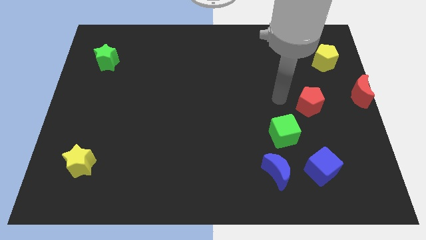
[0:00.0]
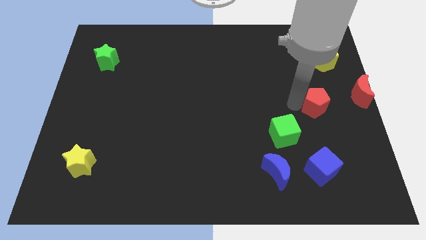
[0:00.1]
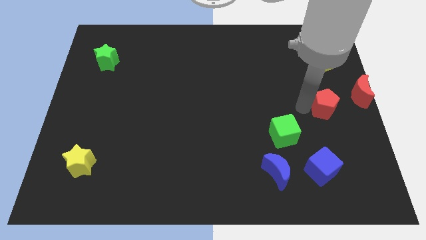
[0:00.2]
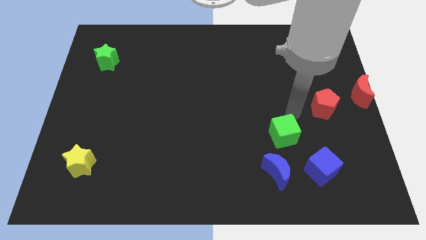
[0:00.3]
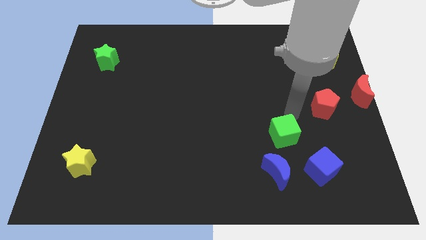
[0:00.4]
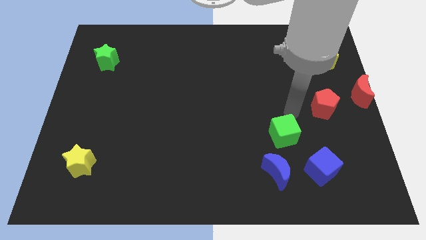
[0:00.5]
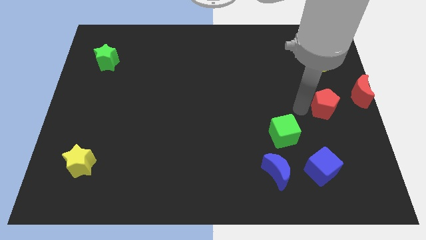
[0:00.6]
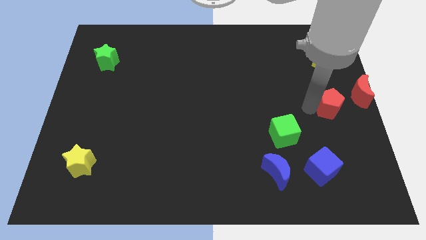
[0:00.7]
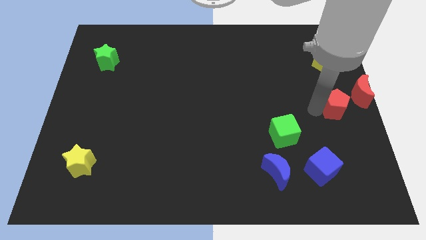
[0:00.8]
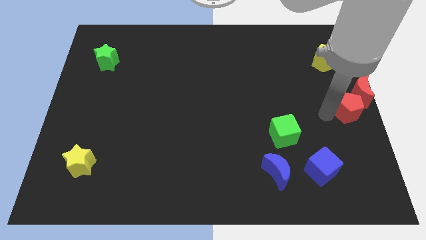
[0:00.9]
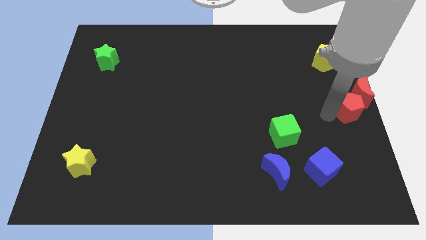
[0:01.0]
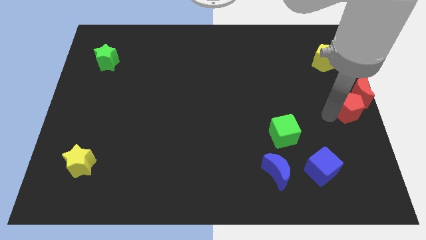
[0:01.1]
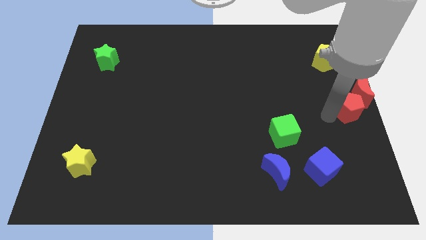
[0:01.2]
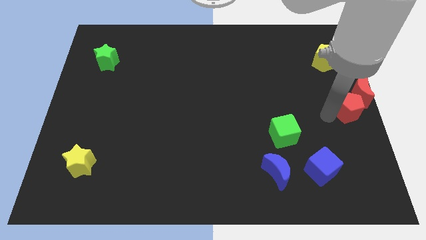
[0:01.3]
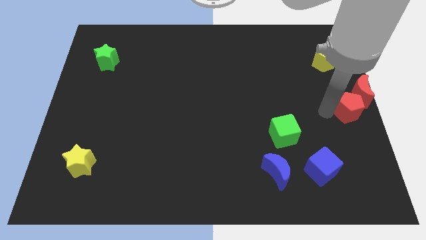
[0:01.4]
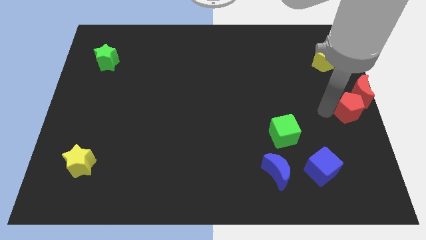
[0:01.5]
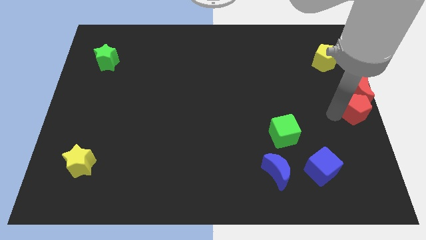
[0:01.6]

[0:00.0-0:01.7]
move the red pentagon below the red moon

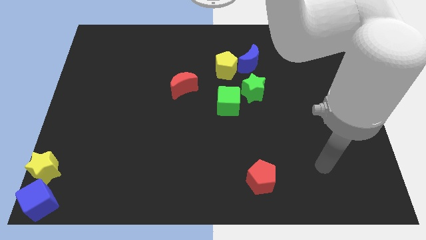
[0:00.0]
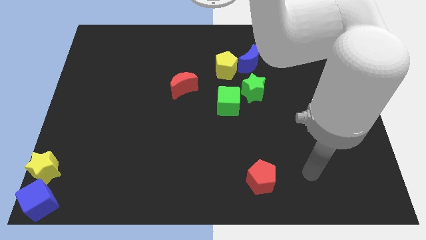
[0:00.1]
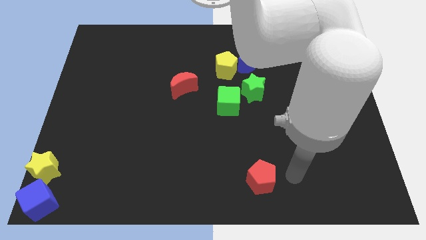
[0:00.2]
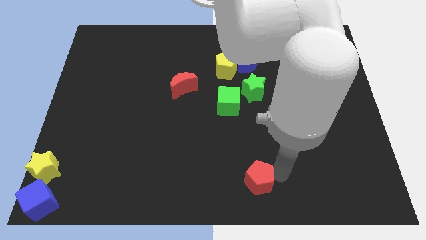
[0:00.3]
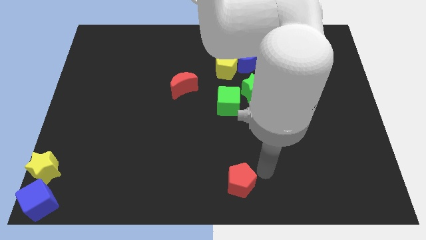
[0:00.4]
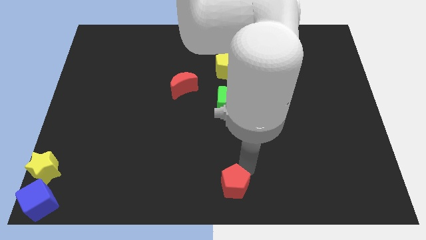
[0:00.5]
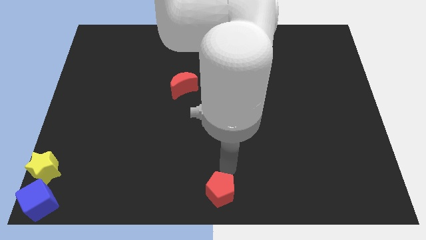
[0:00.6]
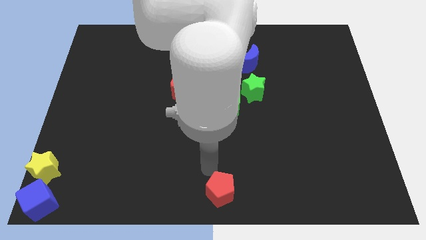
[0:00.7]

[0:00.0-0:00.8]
place red pentagon at bottom center

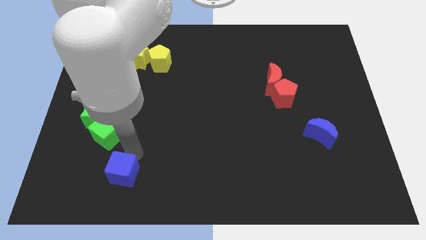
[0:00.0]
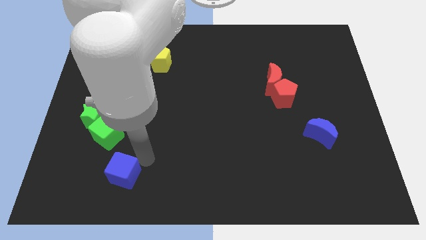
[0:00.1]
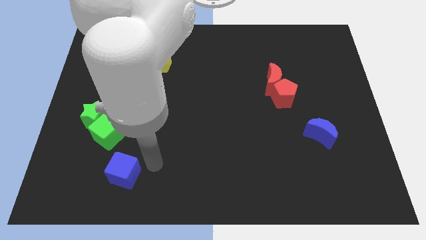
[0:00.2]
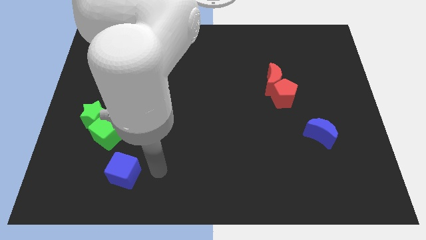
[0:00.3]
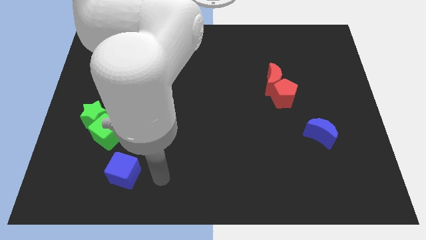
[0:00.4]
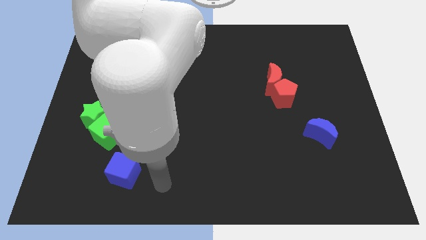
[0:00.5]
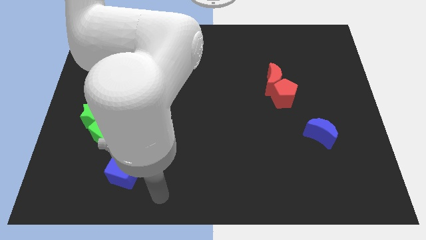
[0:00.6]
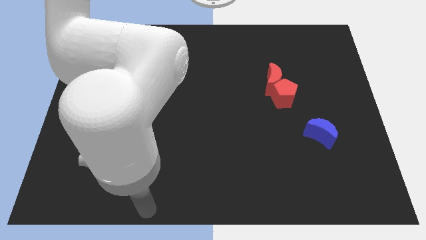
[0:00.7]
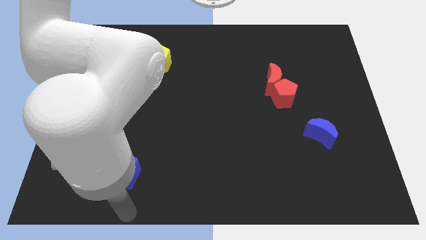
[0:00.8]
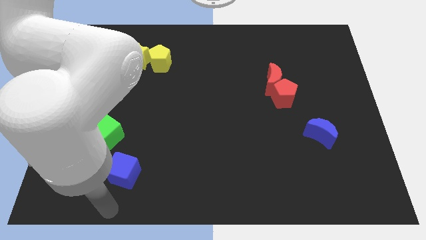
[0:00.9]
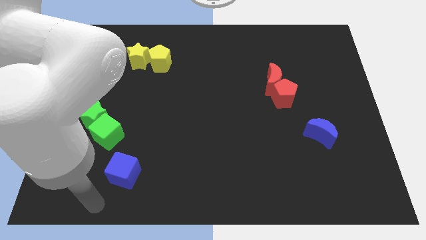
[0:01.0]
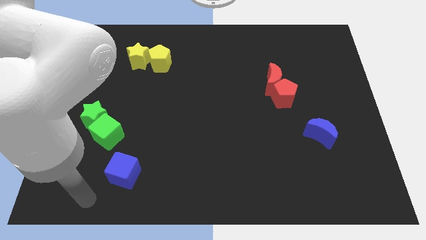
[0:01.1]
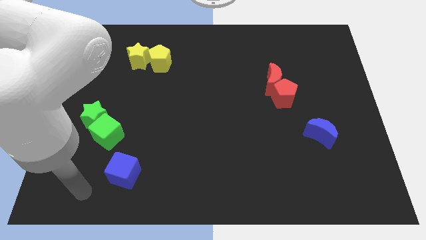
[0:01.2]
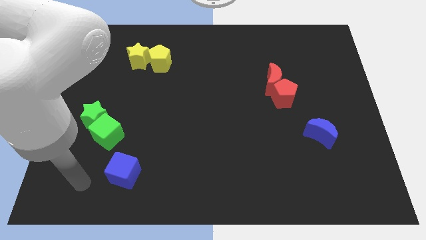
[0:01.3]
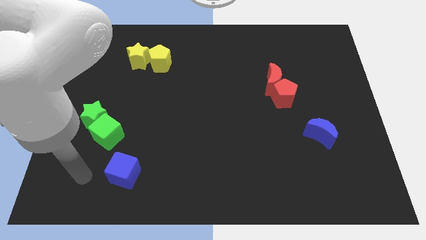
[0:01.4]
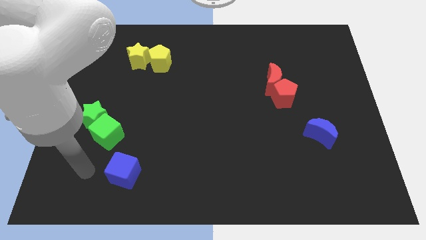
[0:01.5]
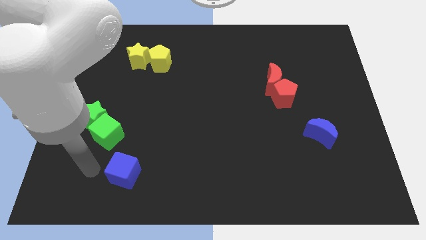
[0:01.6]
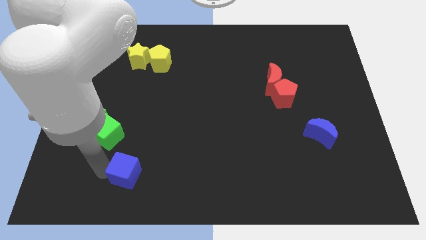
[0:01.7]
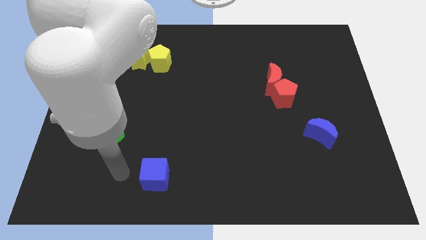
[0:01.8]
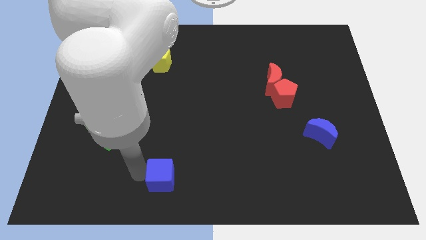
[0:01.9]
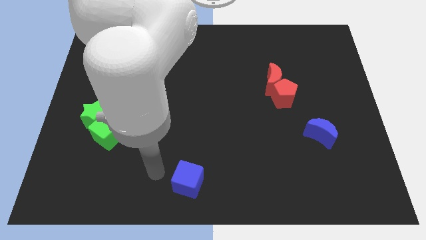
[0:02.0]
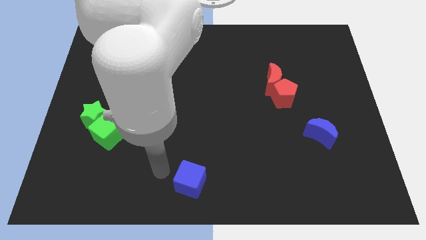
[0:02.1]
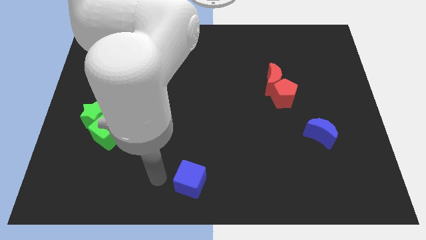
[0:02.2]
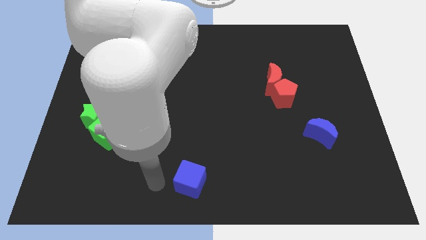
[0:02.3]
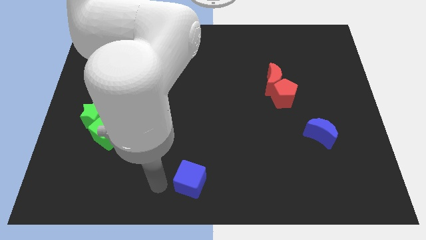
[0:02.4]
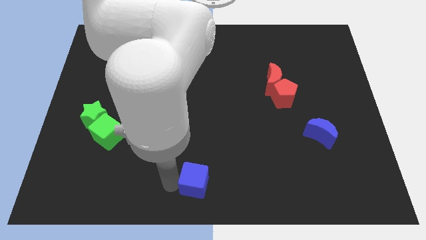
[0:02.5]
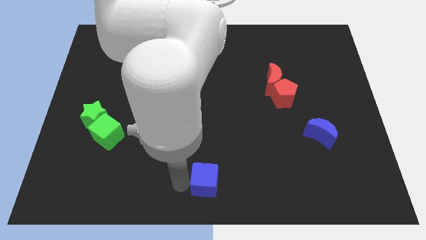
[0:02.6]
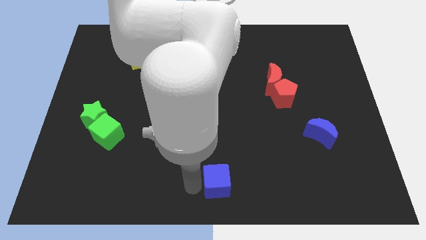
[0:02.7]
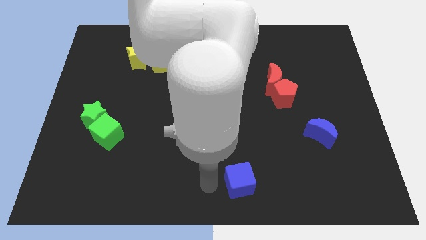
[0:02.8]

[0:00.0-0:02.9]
place the blue cube diagonally bottom left to the blue moon

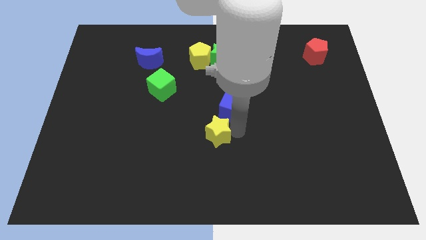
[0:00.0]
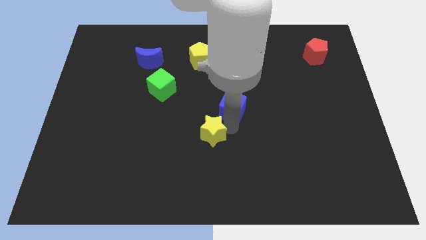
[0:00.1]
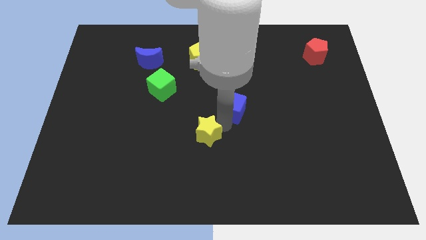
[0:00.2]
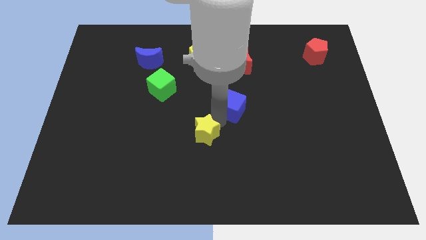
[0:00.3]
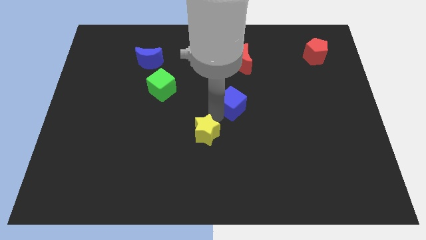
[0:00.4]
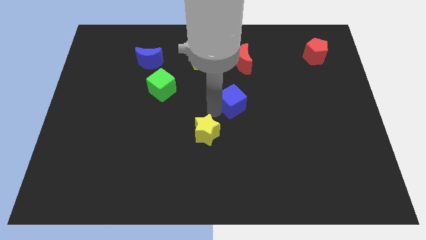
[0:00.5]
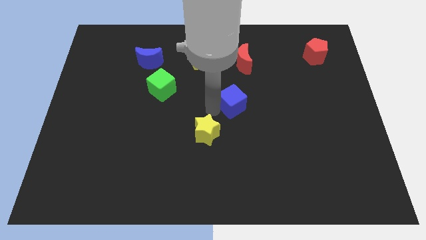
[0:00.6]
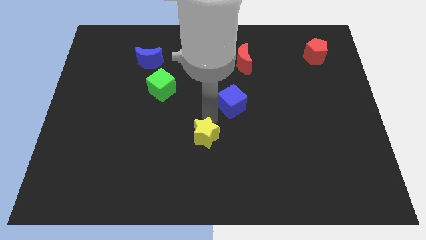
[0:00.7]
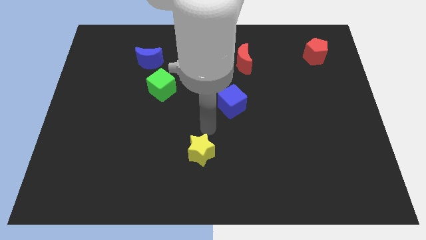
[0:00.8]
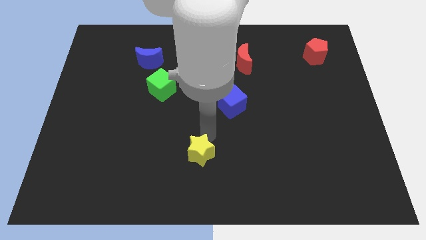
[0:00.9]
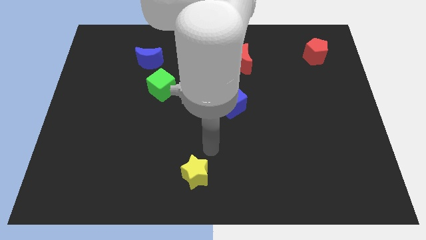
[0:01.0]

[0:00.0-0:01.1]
separate yellow star from blue cube

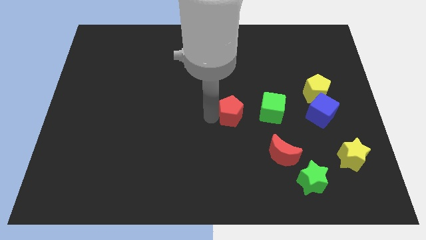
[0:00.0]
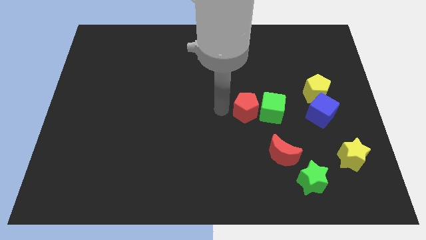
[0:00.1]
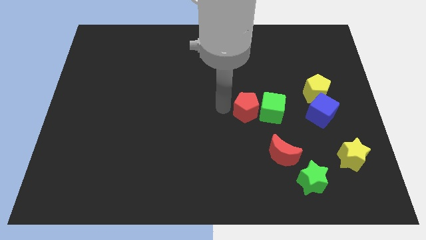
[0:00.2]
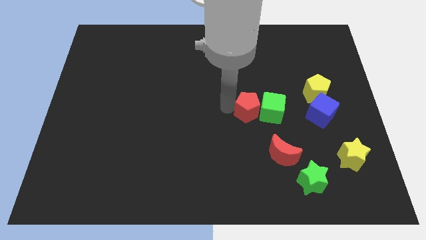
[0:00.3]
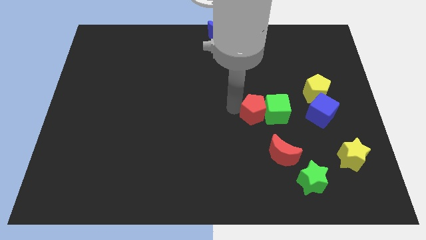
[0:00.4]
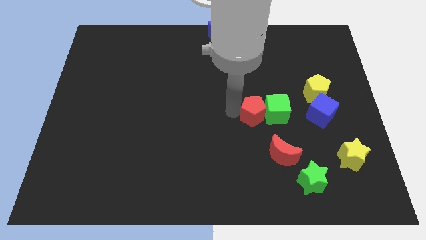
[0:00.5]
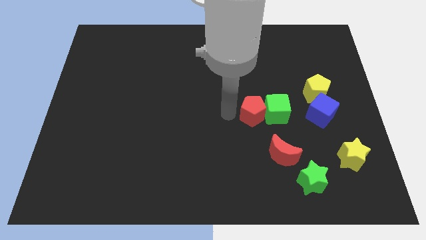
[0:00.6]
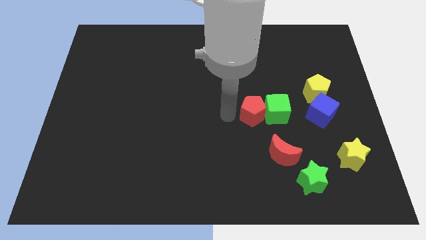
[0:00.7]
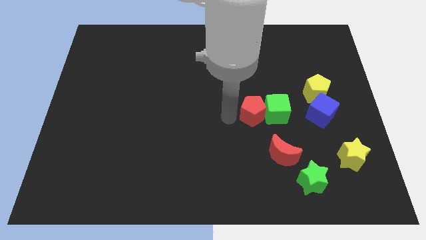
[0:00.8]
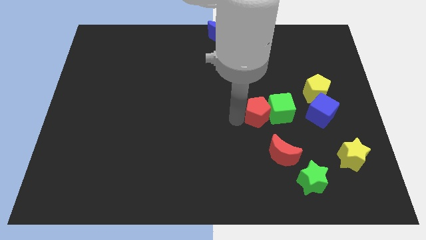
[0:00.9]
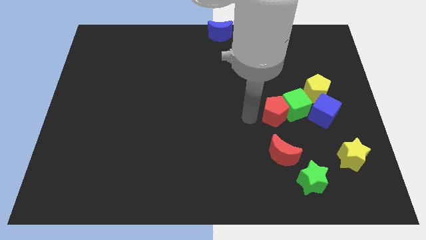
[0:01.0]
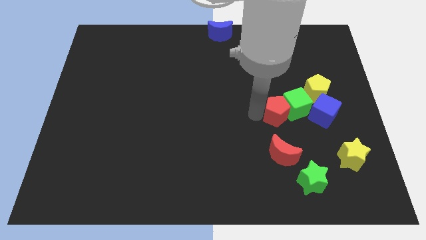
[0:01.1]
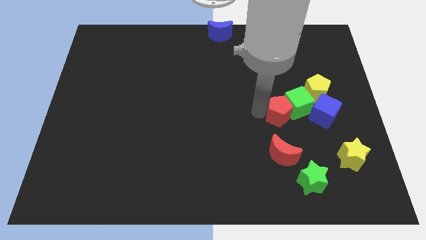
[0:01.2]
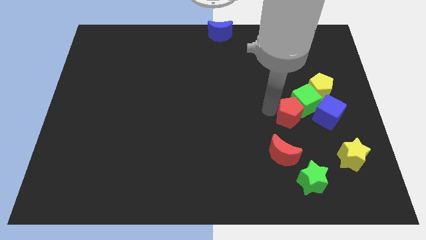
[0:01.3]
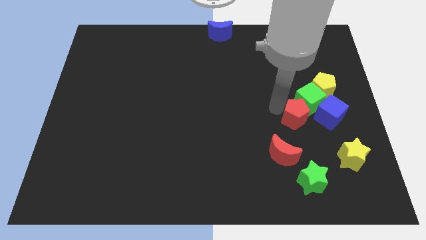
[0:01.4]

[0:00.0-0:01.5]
push red pentagon towards green cube

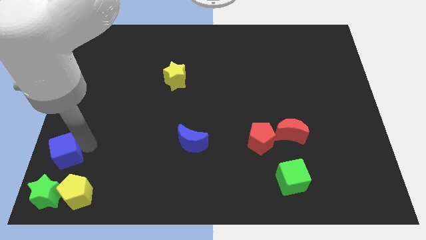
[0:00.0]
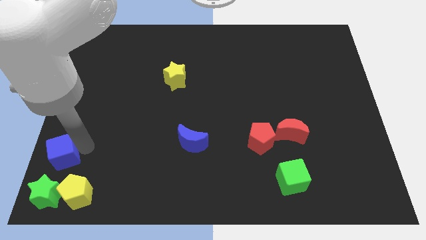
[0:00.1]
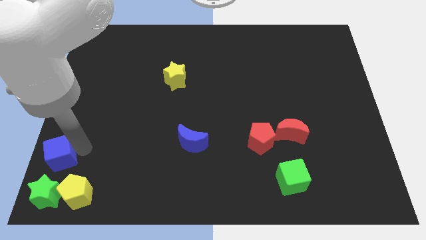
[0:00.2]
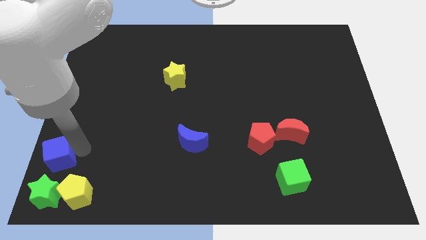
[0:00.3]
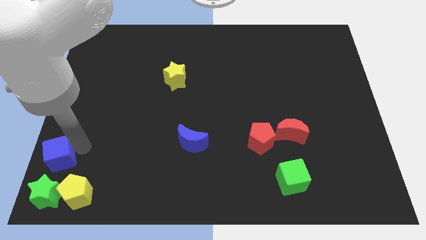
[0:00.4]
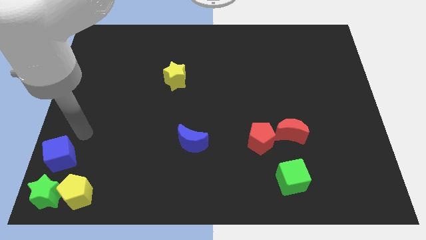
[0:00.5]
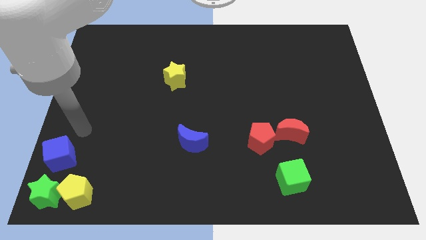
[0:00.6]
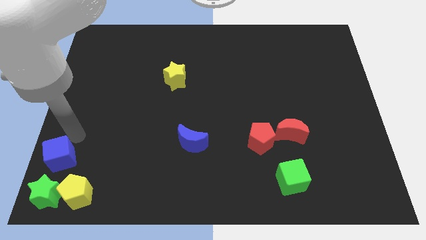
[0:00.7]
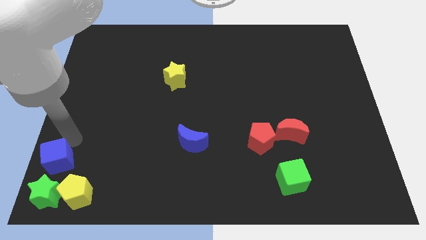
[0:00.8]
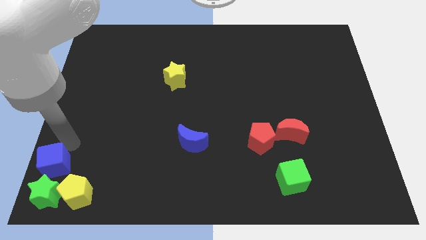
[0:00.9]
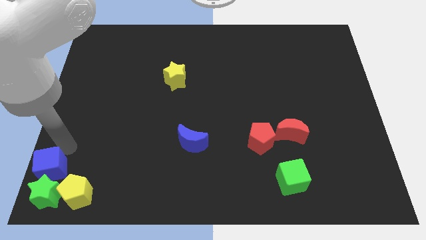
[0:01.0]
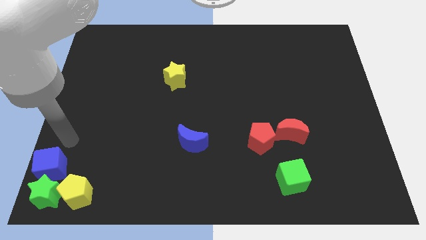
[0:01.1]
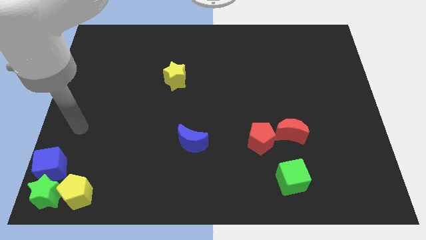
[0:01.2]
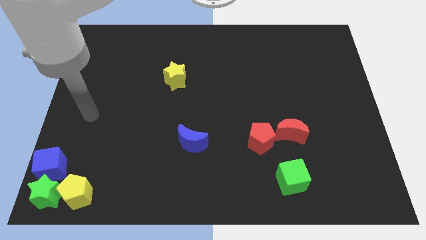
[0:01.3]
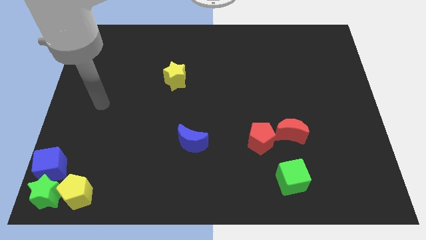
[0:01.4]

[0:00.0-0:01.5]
place the blue cube above the green star
